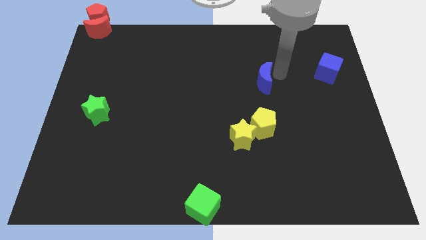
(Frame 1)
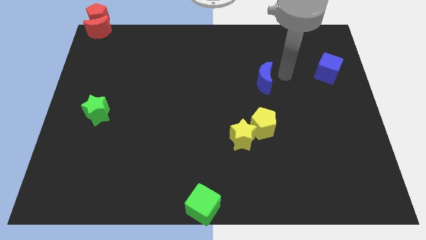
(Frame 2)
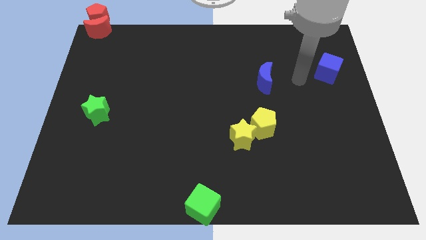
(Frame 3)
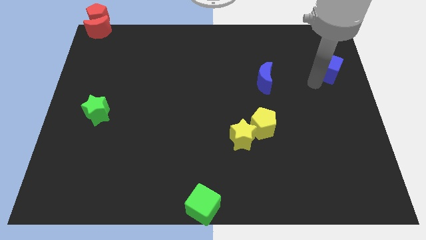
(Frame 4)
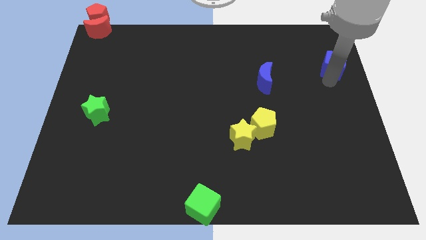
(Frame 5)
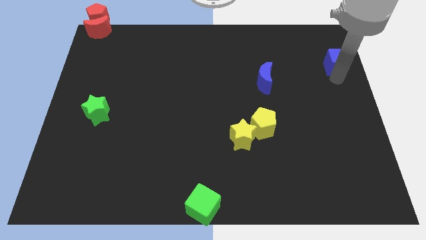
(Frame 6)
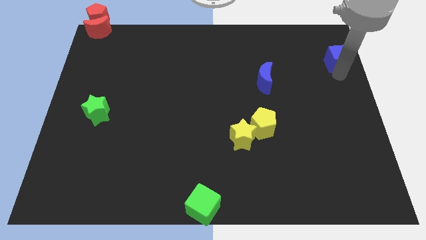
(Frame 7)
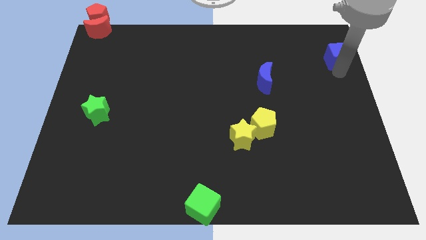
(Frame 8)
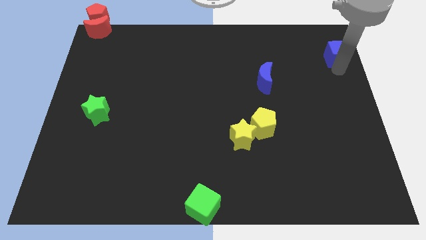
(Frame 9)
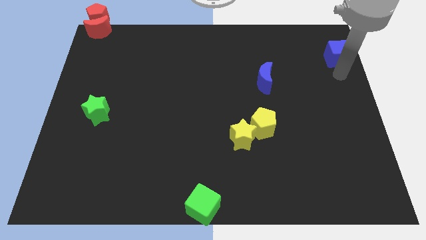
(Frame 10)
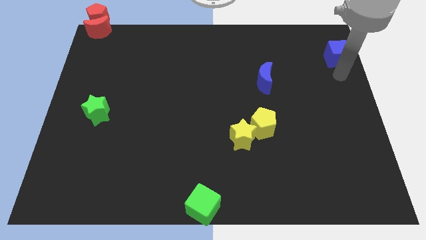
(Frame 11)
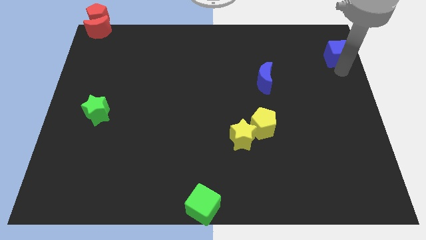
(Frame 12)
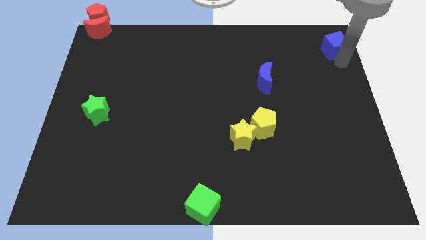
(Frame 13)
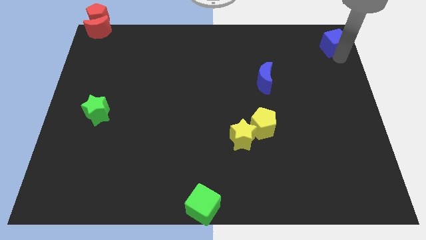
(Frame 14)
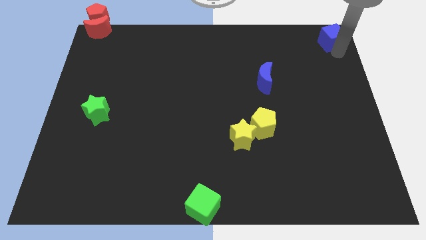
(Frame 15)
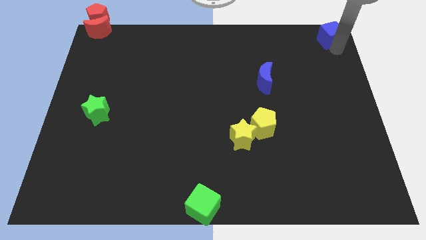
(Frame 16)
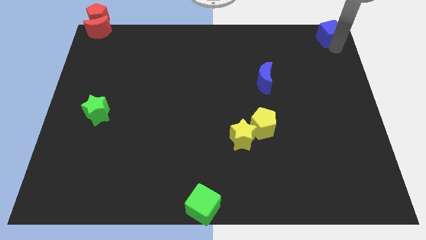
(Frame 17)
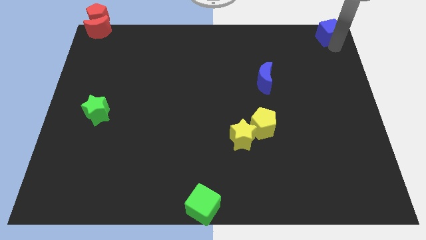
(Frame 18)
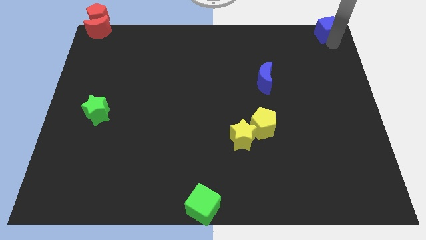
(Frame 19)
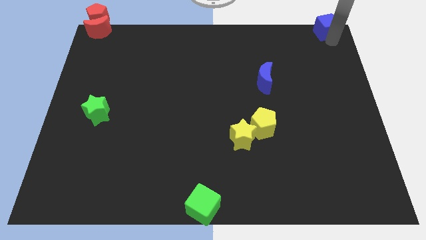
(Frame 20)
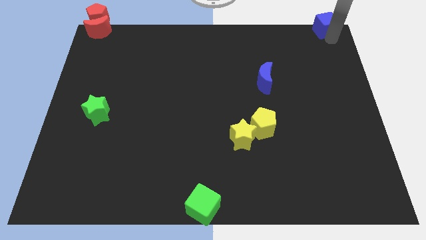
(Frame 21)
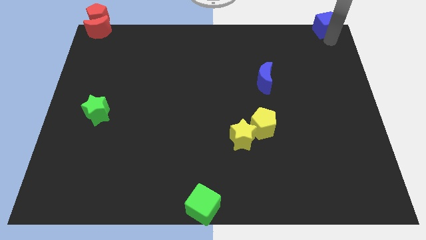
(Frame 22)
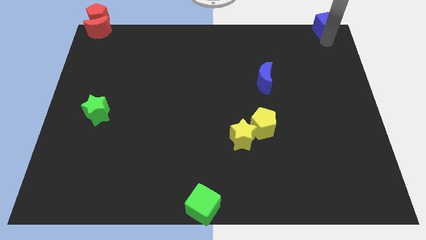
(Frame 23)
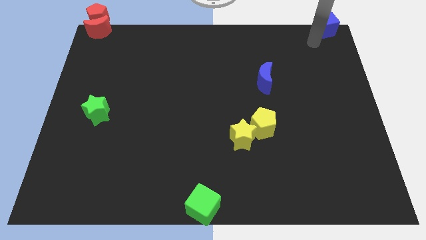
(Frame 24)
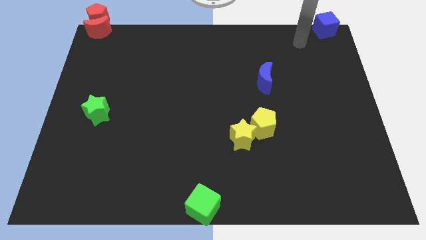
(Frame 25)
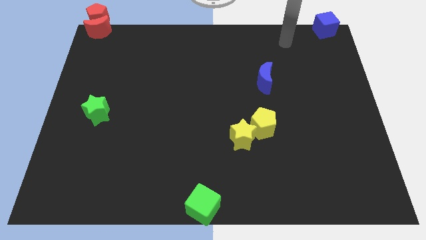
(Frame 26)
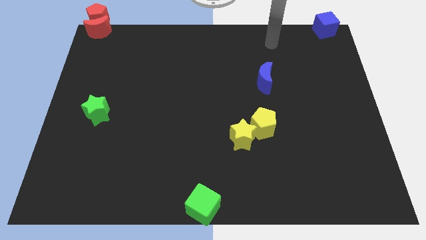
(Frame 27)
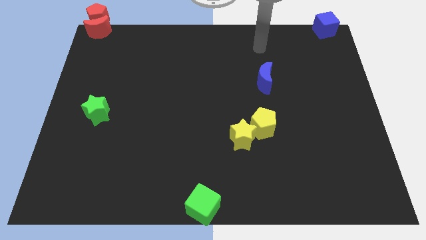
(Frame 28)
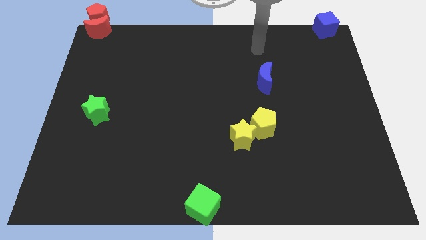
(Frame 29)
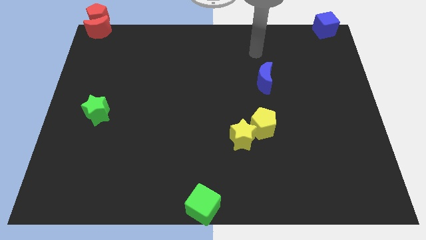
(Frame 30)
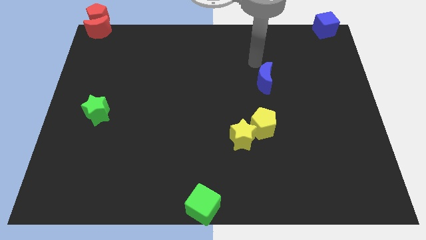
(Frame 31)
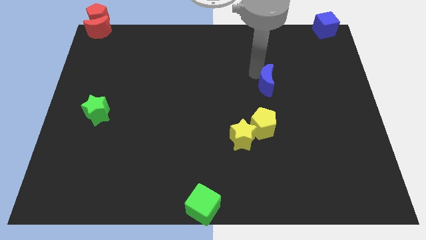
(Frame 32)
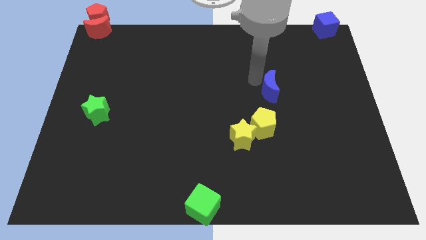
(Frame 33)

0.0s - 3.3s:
move the blue cube to the top right corner of the board

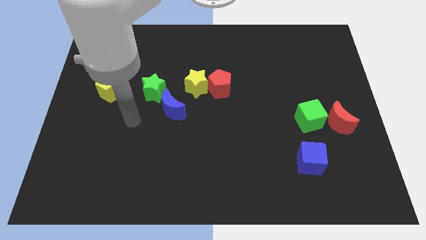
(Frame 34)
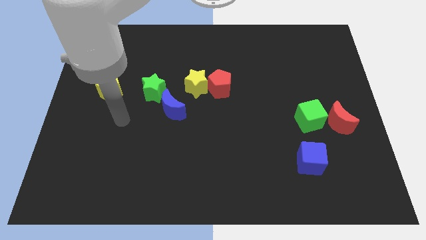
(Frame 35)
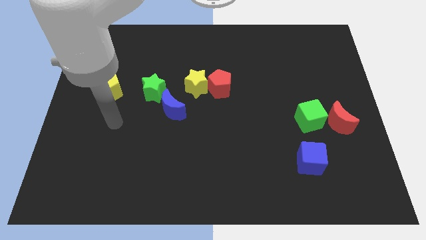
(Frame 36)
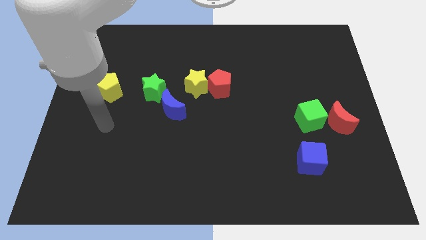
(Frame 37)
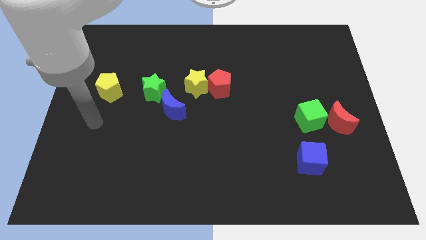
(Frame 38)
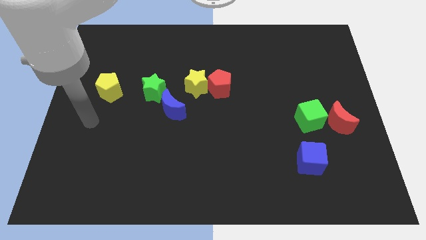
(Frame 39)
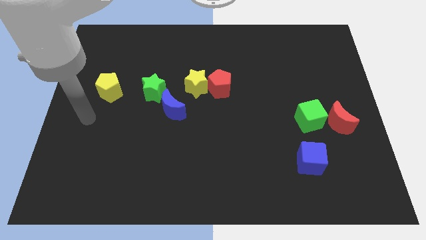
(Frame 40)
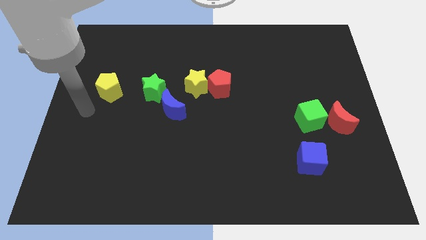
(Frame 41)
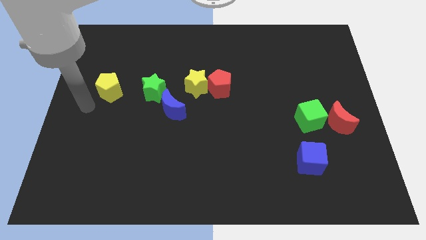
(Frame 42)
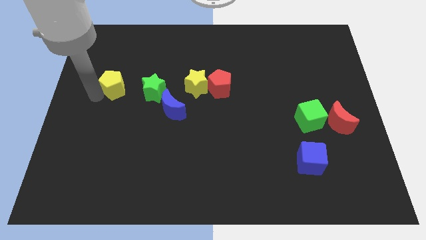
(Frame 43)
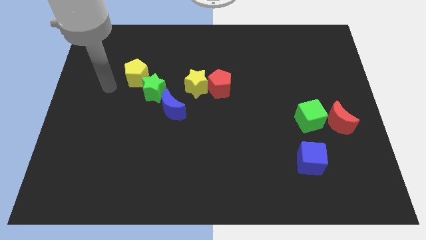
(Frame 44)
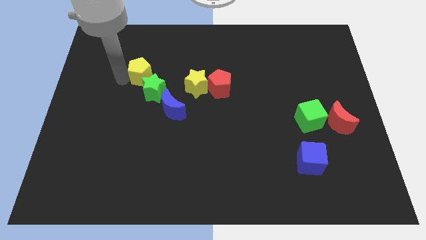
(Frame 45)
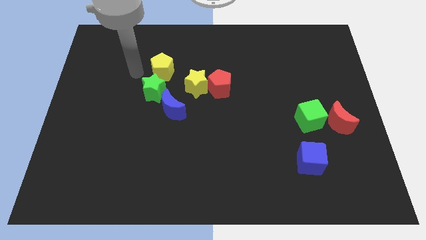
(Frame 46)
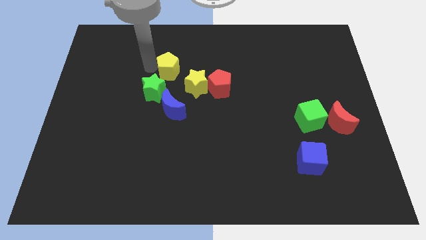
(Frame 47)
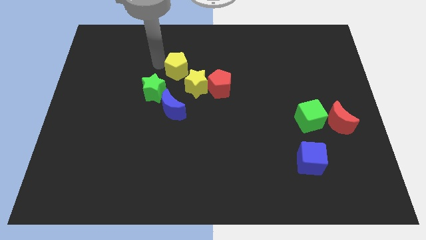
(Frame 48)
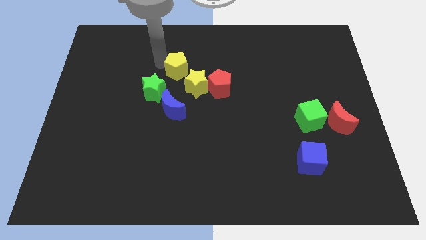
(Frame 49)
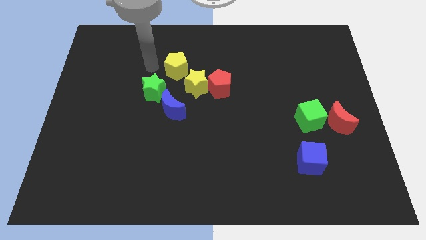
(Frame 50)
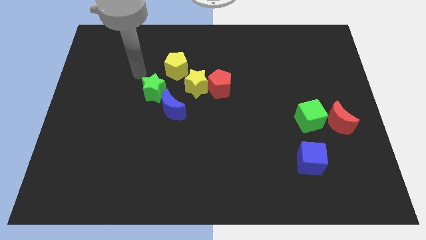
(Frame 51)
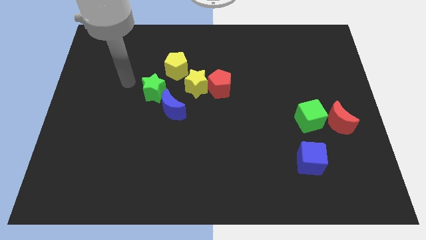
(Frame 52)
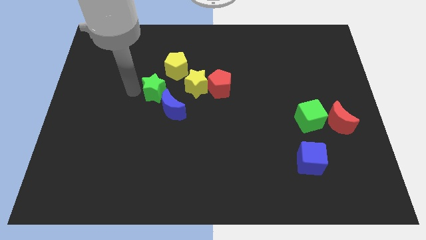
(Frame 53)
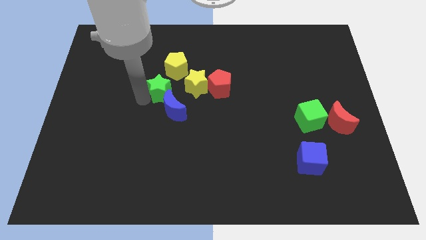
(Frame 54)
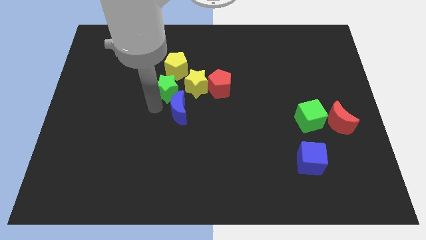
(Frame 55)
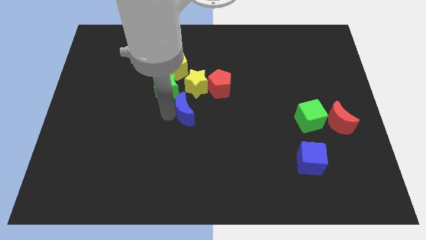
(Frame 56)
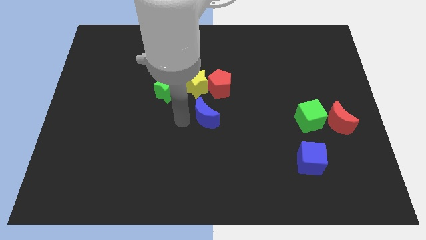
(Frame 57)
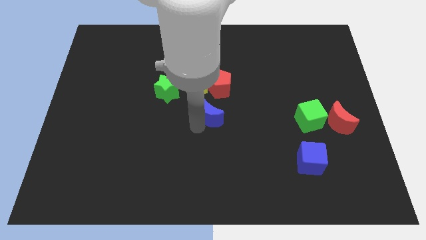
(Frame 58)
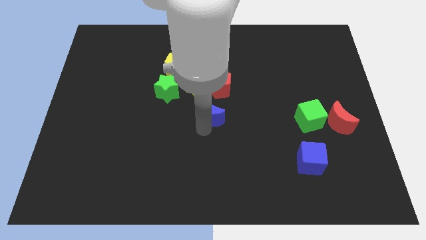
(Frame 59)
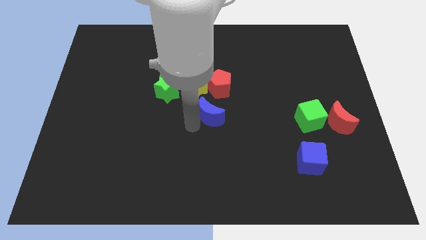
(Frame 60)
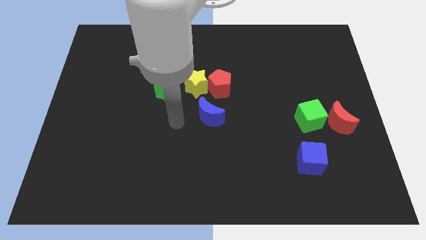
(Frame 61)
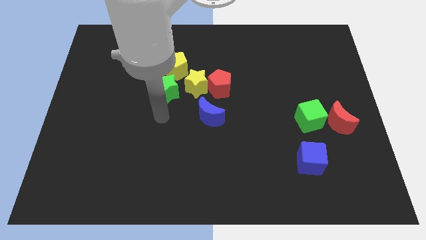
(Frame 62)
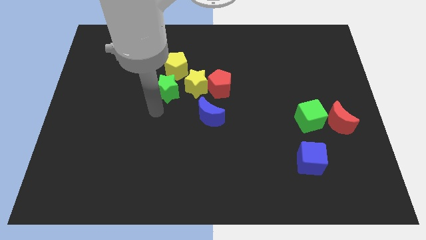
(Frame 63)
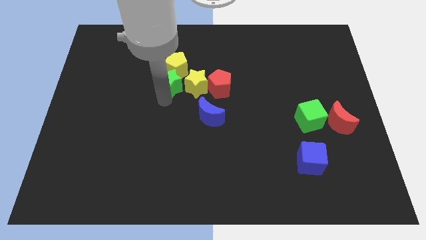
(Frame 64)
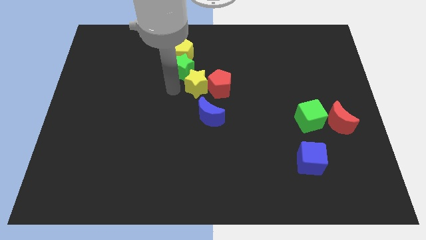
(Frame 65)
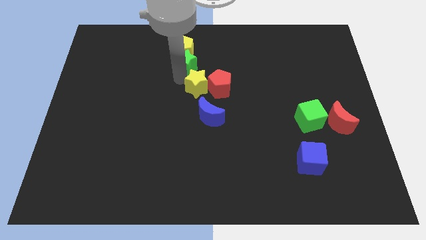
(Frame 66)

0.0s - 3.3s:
place the green star in between the yellow pentagon and yellow star

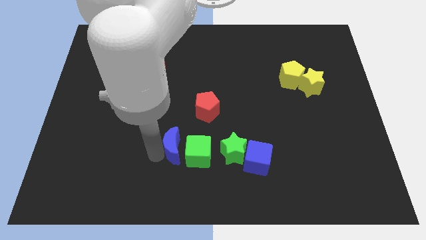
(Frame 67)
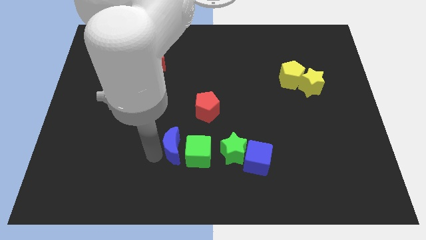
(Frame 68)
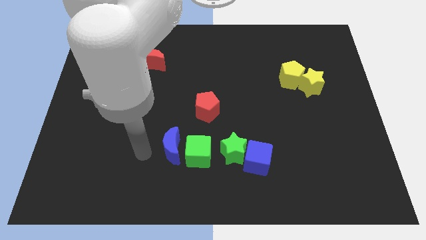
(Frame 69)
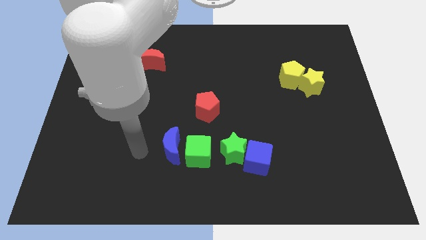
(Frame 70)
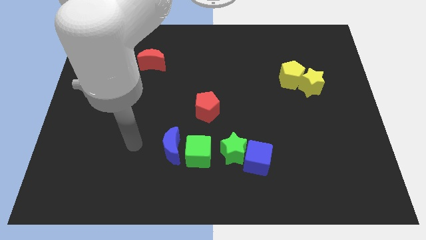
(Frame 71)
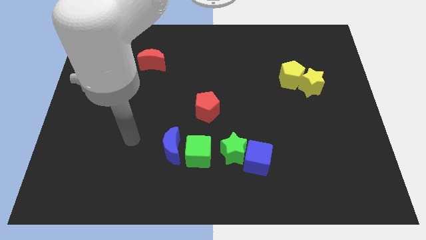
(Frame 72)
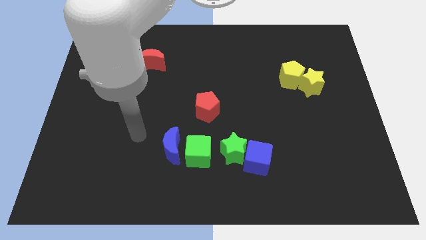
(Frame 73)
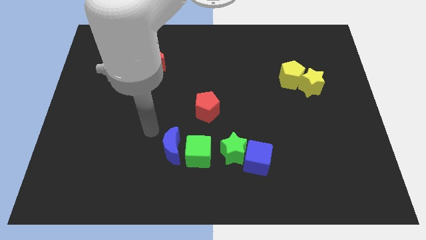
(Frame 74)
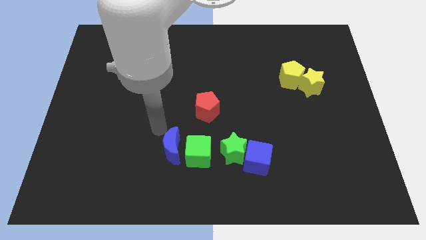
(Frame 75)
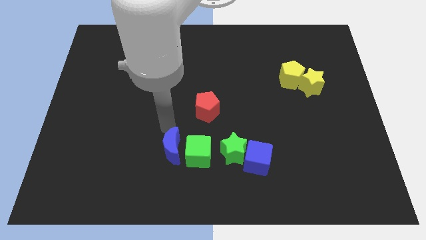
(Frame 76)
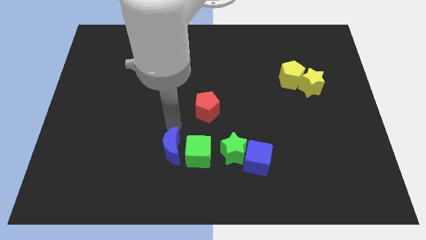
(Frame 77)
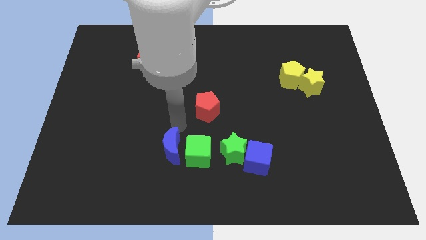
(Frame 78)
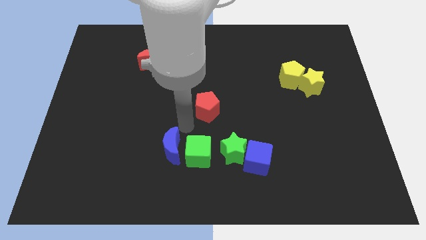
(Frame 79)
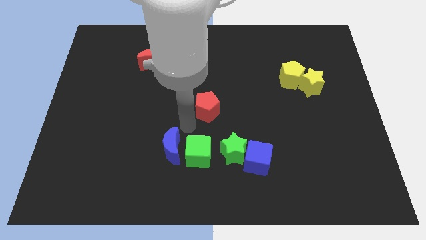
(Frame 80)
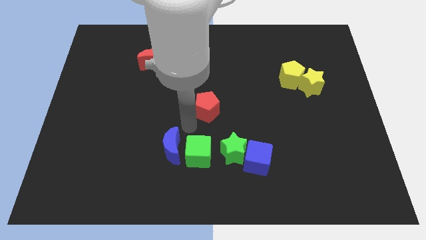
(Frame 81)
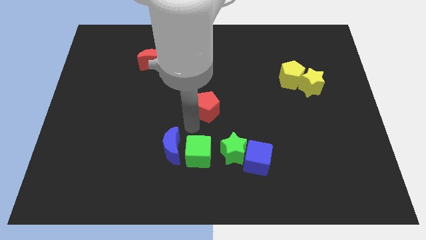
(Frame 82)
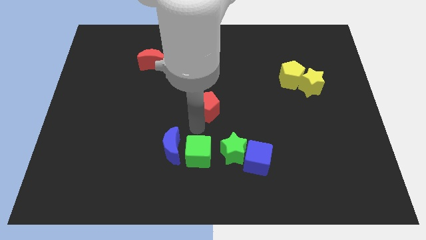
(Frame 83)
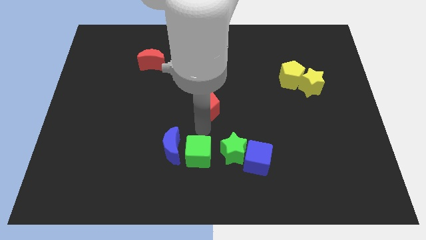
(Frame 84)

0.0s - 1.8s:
point your arm in between the green cube and red pentagon

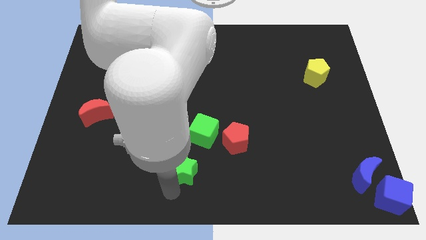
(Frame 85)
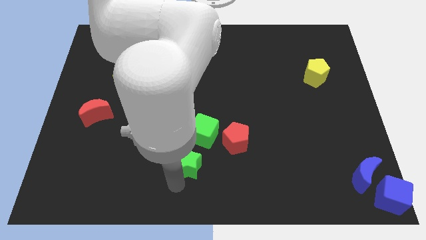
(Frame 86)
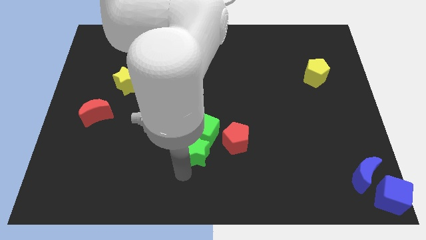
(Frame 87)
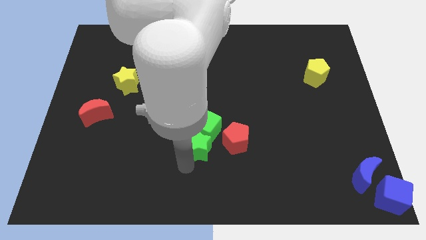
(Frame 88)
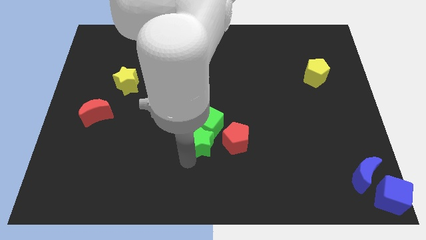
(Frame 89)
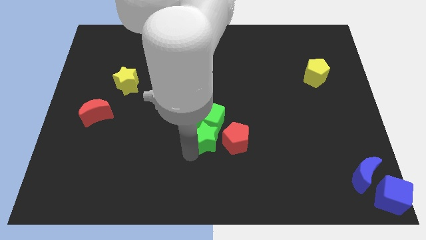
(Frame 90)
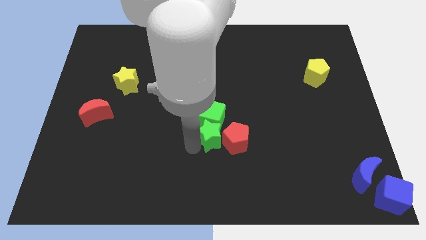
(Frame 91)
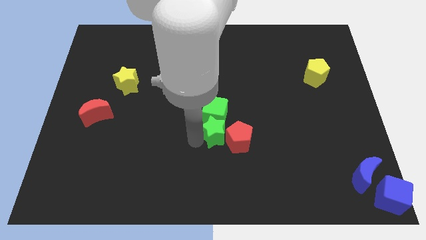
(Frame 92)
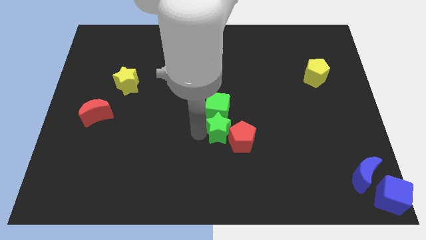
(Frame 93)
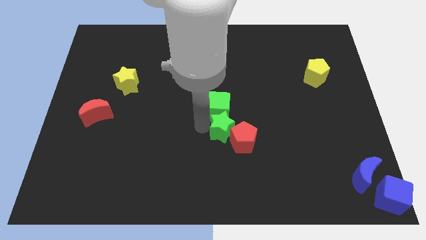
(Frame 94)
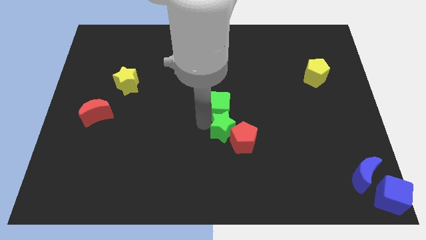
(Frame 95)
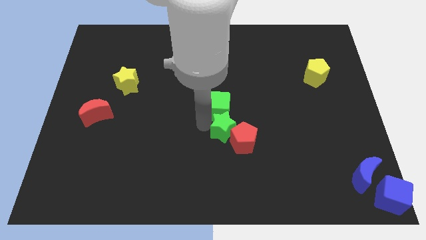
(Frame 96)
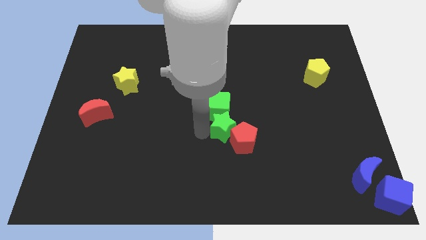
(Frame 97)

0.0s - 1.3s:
place green star below the green cube
